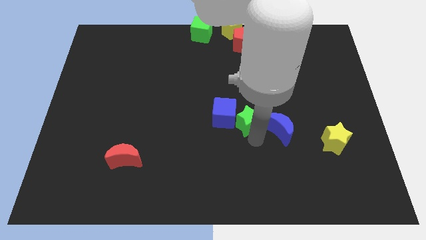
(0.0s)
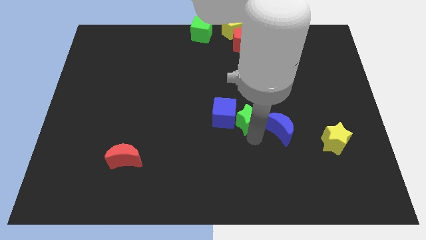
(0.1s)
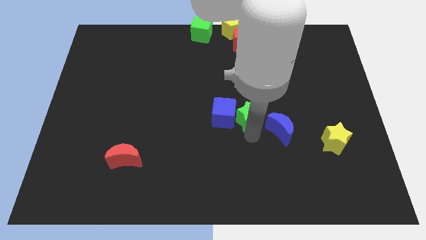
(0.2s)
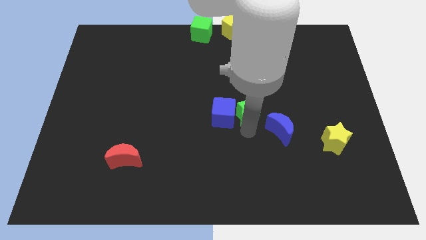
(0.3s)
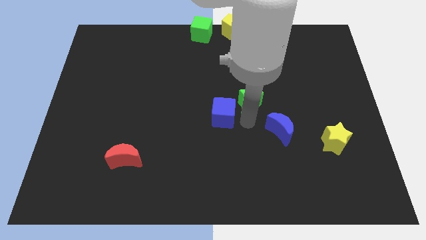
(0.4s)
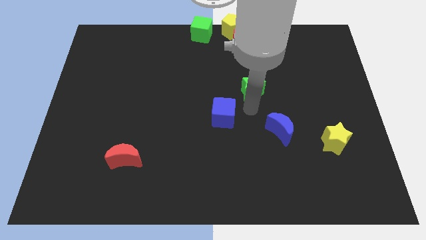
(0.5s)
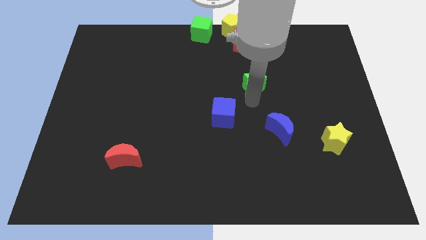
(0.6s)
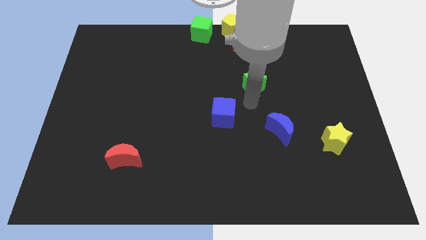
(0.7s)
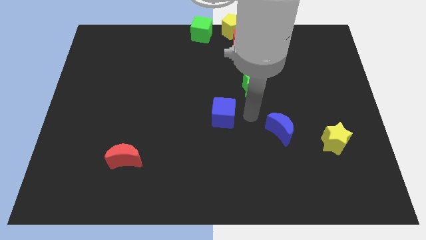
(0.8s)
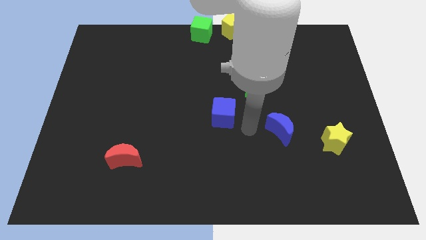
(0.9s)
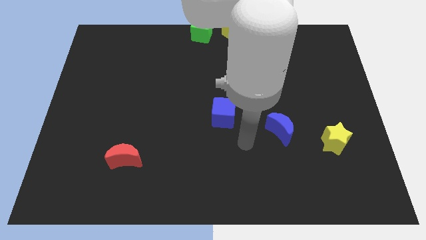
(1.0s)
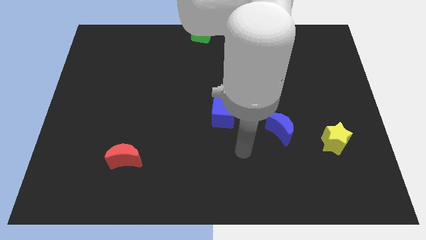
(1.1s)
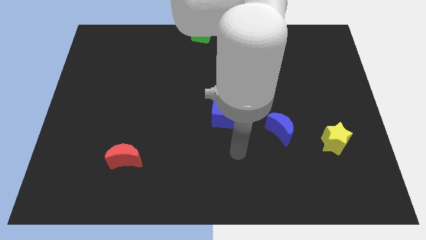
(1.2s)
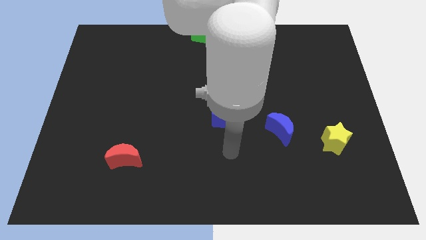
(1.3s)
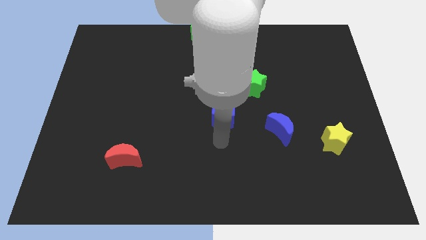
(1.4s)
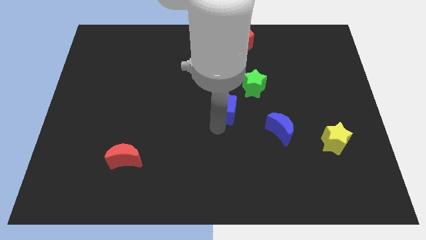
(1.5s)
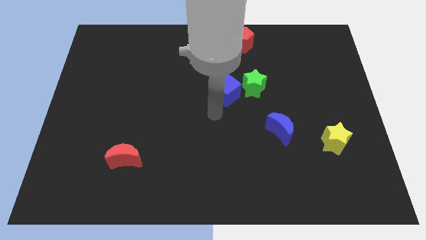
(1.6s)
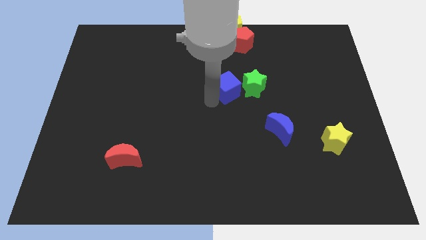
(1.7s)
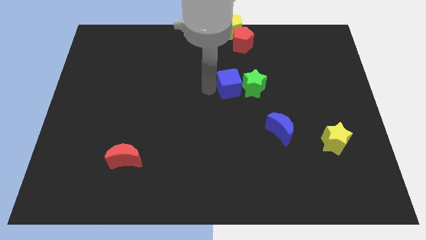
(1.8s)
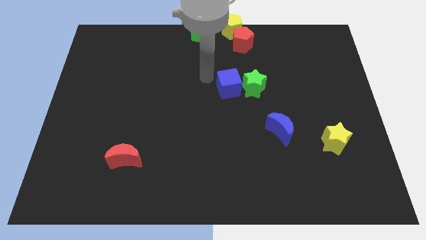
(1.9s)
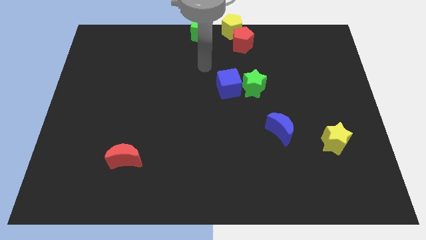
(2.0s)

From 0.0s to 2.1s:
put the green star and blue cube below red pentagon

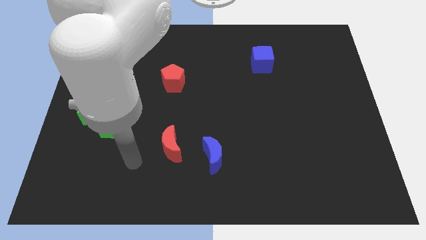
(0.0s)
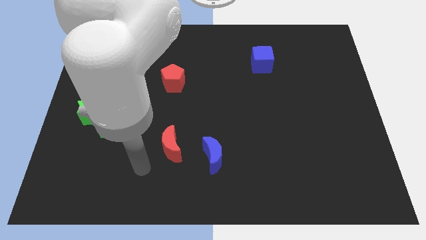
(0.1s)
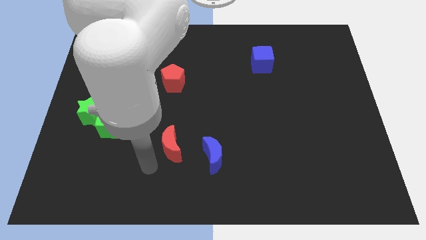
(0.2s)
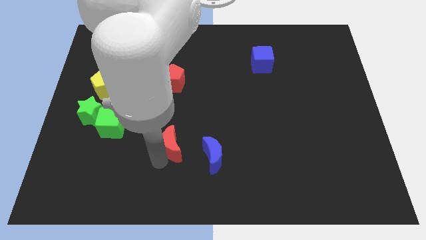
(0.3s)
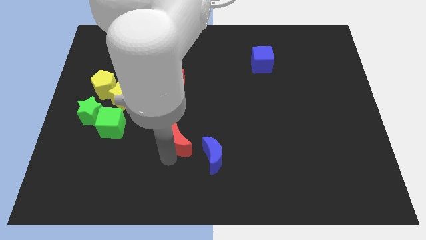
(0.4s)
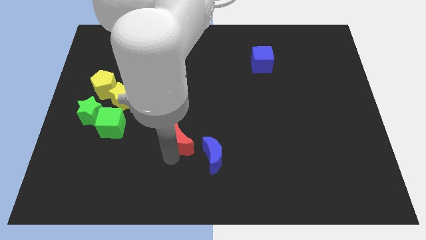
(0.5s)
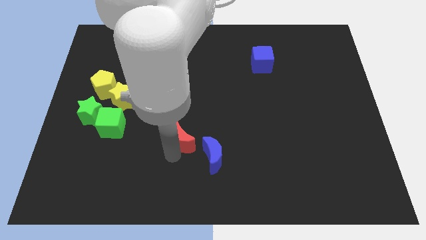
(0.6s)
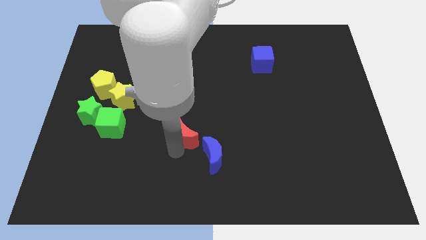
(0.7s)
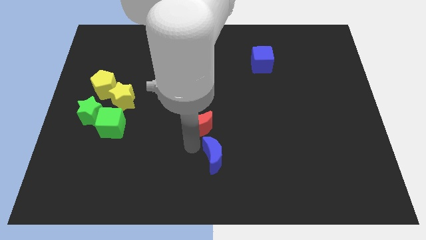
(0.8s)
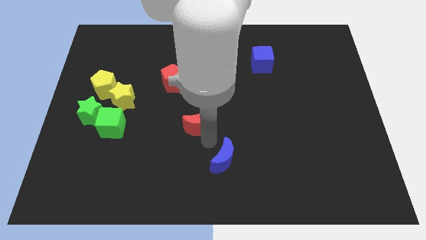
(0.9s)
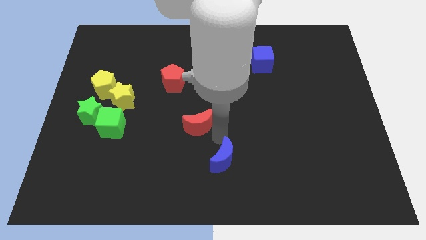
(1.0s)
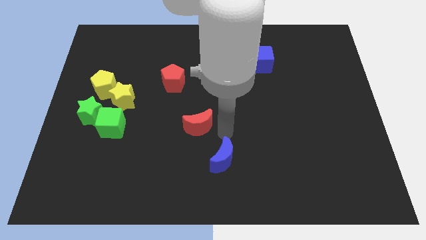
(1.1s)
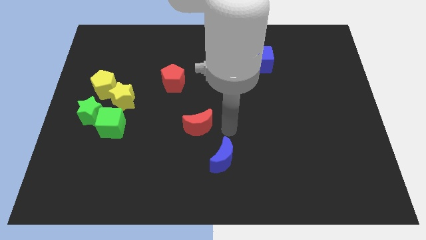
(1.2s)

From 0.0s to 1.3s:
push the red moon upwards slightly

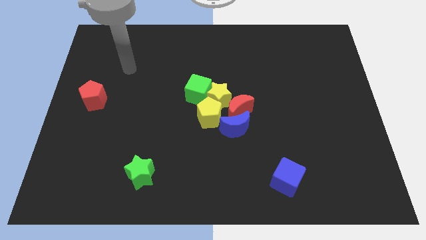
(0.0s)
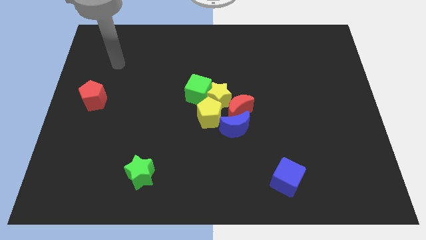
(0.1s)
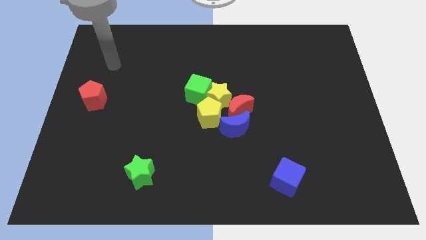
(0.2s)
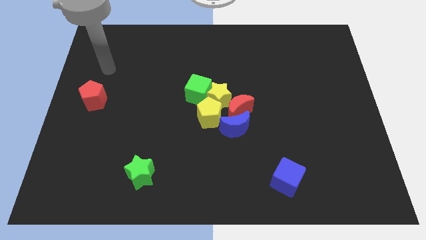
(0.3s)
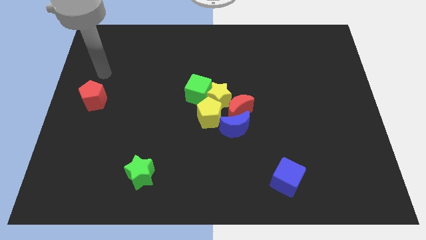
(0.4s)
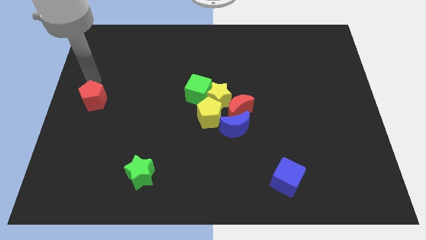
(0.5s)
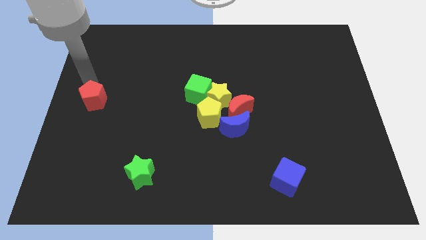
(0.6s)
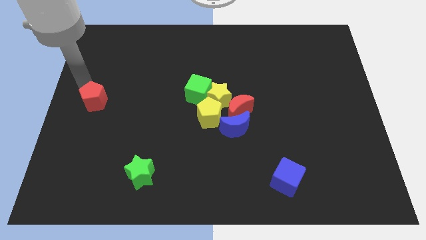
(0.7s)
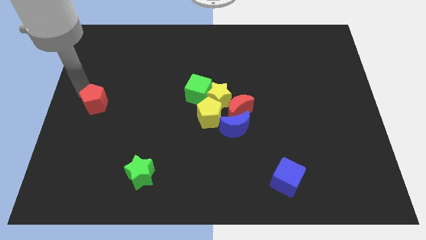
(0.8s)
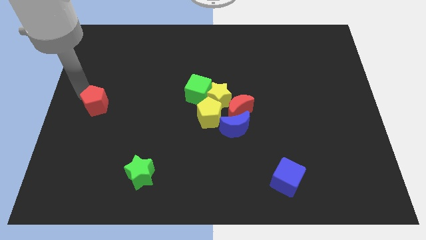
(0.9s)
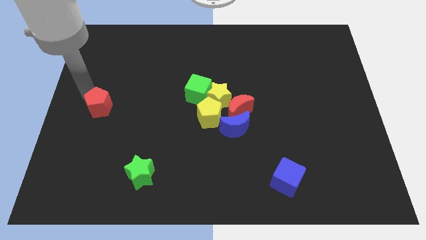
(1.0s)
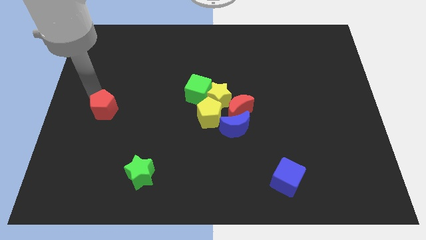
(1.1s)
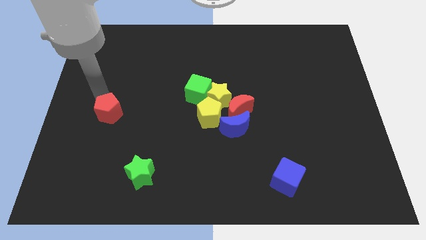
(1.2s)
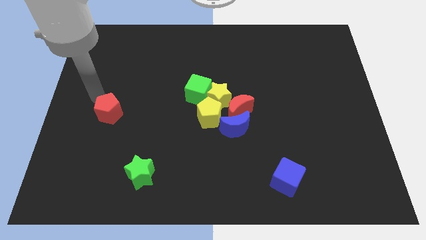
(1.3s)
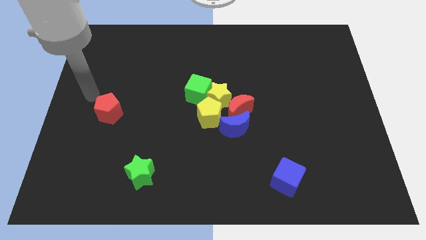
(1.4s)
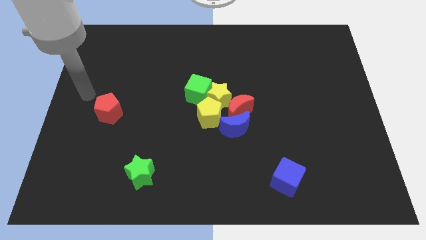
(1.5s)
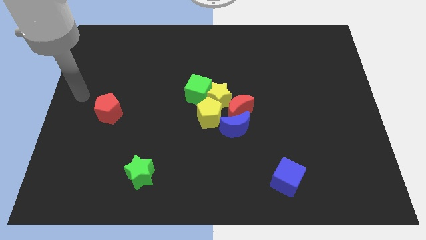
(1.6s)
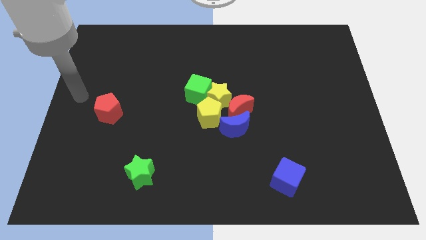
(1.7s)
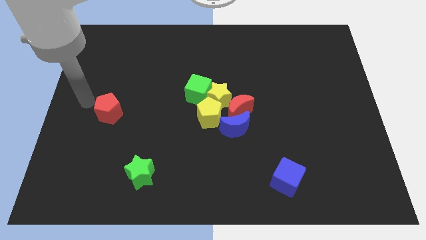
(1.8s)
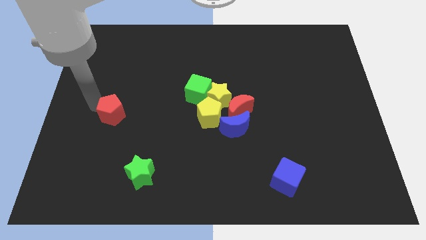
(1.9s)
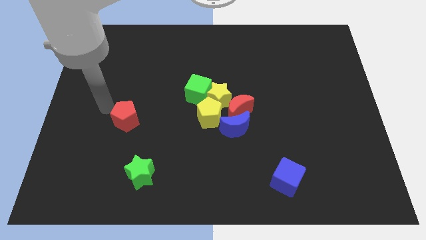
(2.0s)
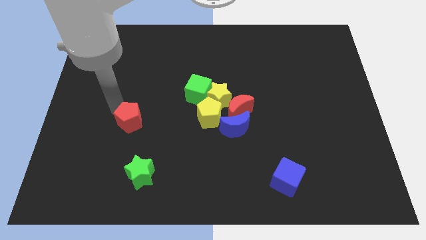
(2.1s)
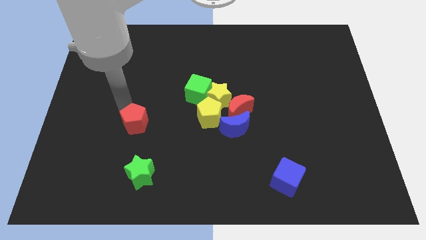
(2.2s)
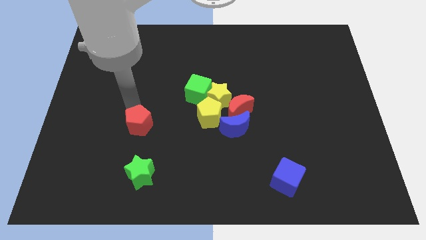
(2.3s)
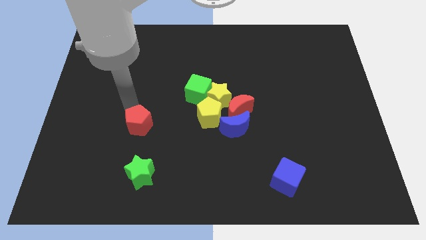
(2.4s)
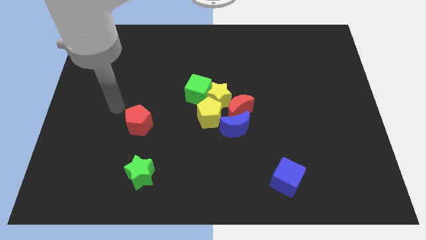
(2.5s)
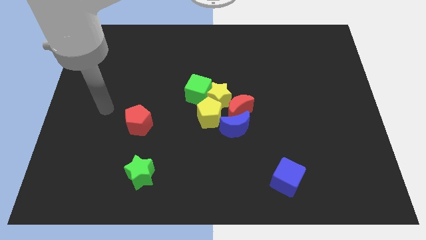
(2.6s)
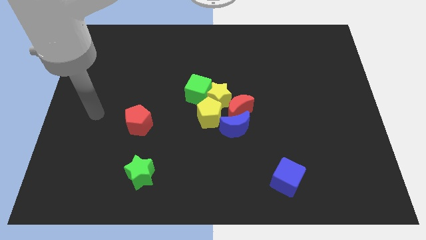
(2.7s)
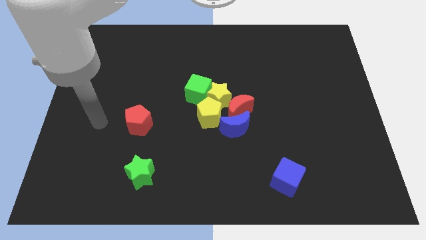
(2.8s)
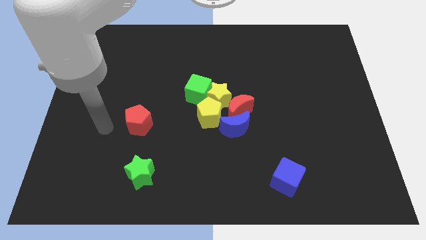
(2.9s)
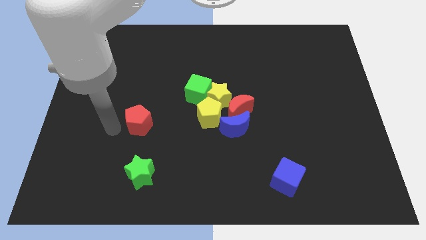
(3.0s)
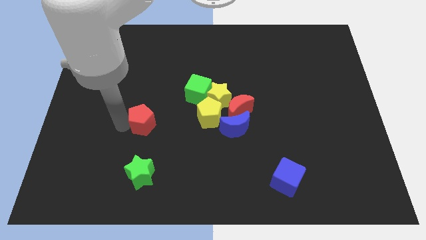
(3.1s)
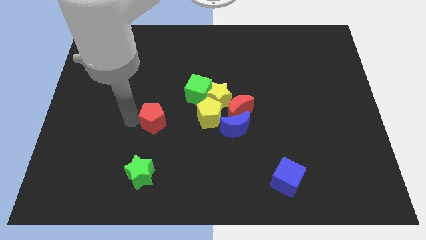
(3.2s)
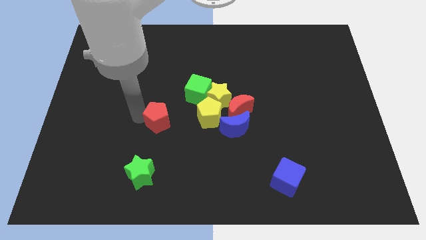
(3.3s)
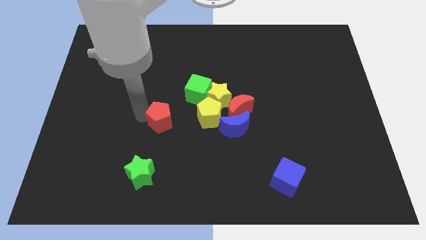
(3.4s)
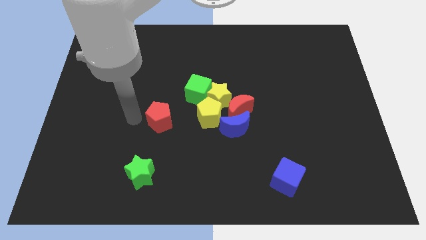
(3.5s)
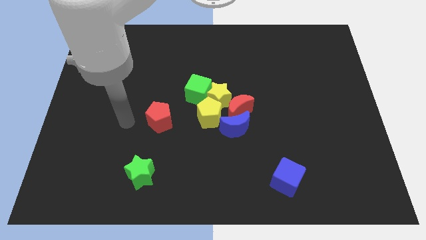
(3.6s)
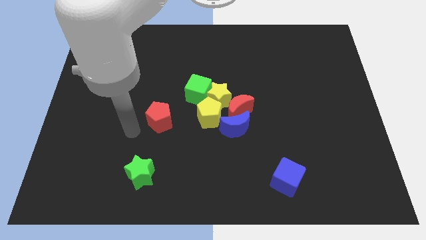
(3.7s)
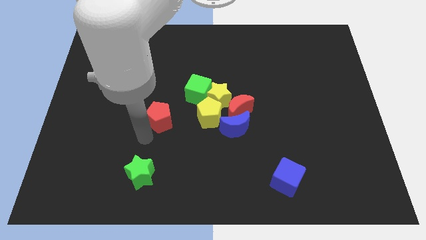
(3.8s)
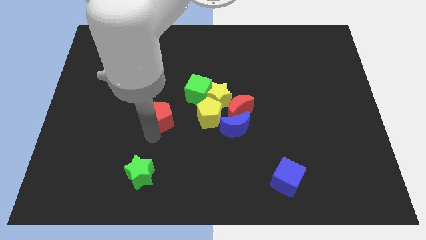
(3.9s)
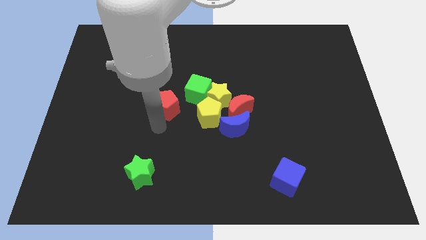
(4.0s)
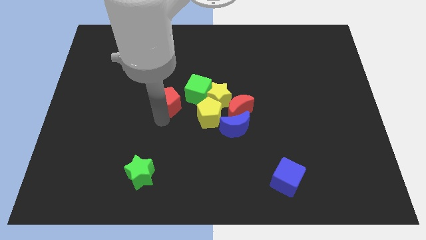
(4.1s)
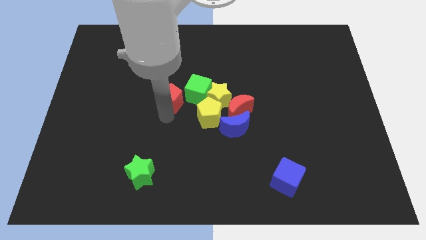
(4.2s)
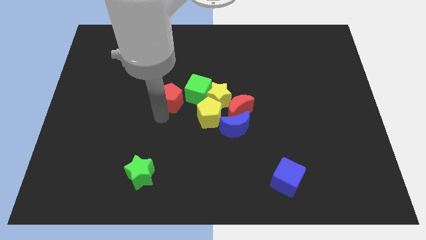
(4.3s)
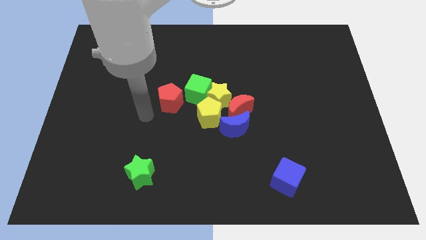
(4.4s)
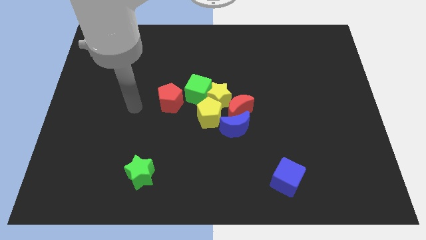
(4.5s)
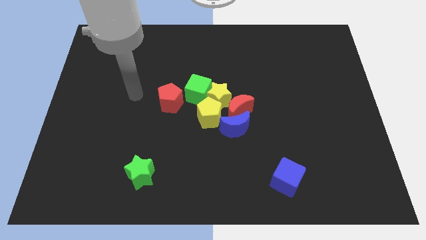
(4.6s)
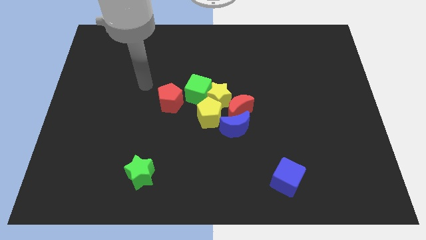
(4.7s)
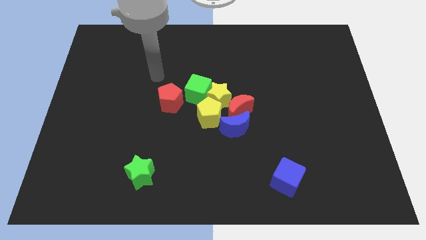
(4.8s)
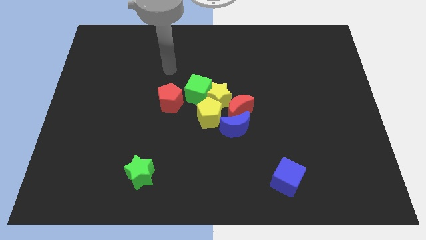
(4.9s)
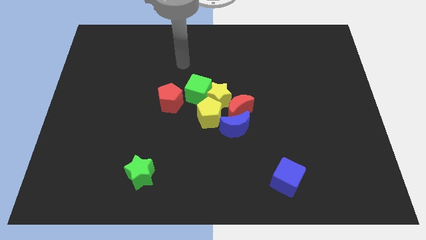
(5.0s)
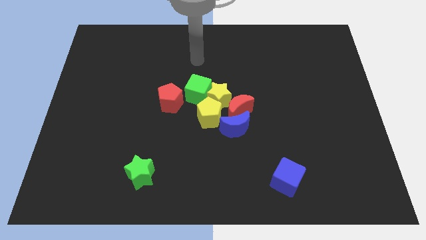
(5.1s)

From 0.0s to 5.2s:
push the red pentagon to the left side of the green cube

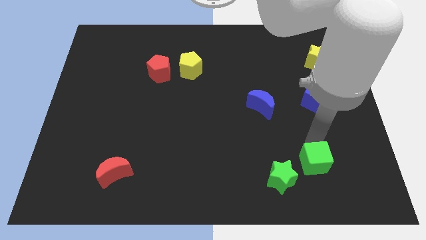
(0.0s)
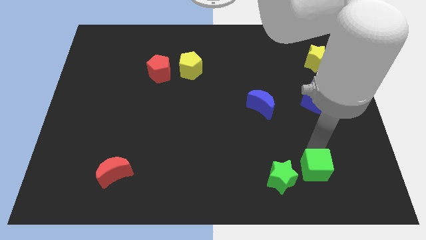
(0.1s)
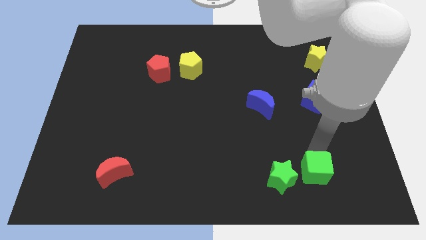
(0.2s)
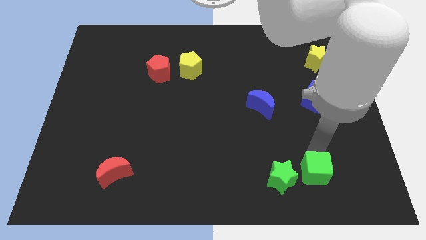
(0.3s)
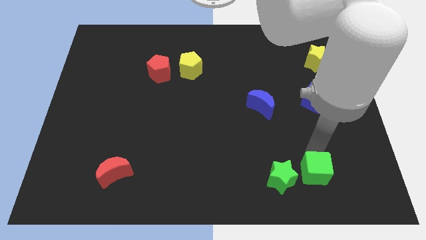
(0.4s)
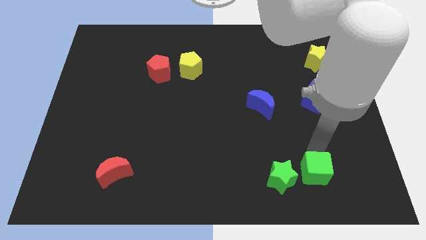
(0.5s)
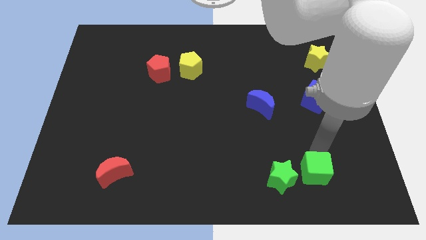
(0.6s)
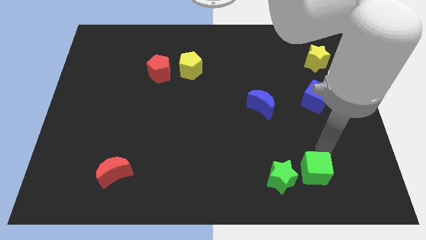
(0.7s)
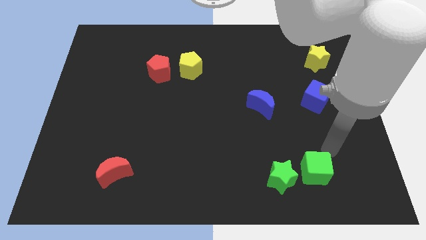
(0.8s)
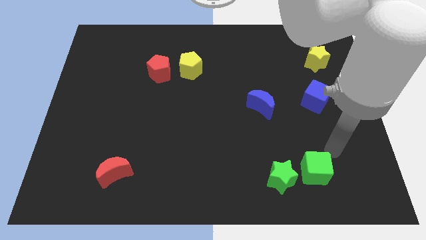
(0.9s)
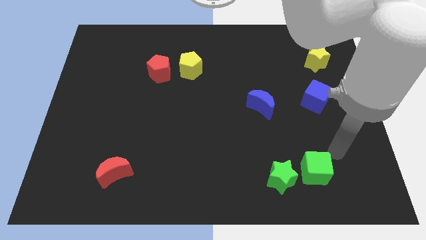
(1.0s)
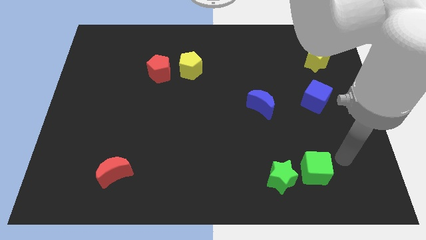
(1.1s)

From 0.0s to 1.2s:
move the green cube towards green star
